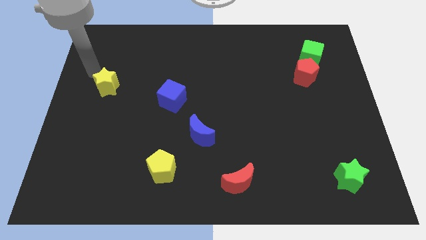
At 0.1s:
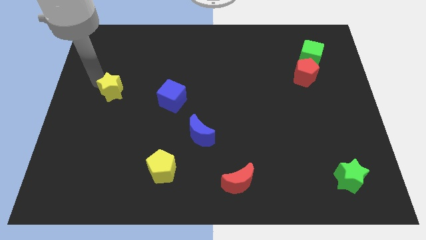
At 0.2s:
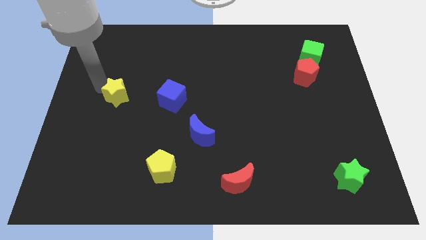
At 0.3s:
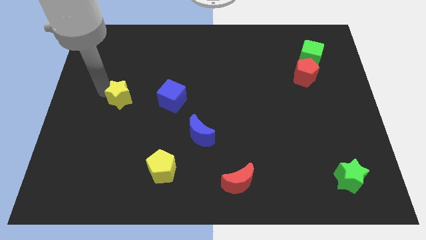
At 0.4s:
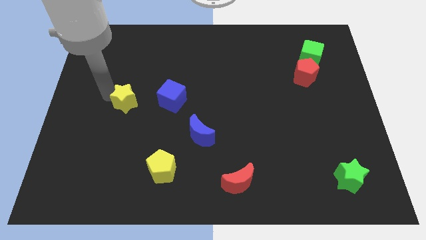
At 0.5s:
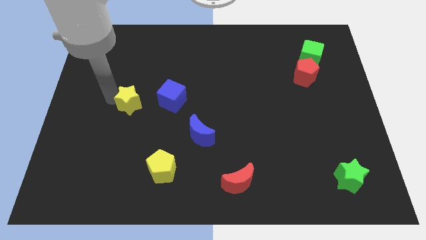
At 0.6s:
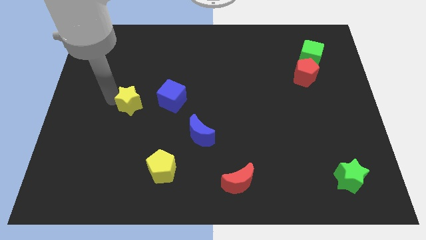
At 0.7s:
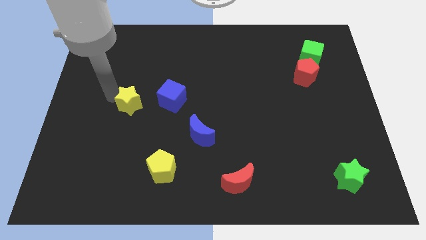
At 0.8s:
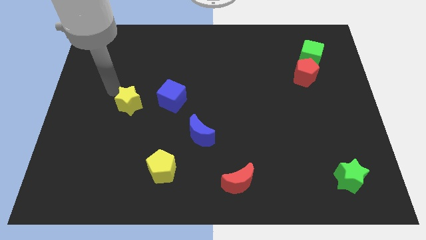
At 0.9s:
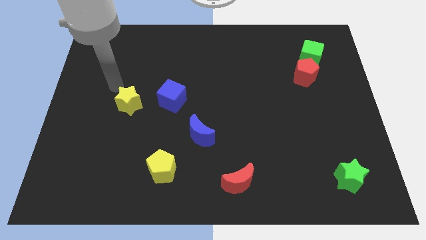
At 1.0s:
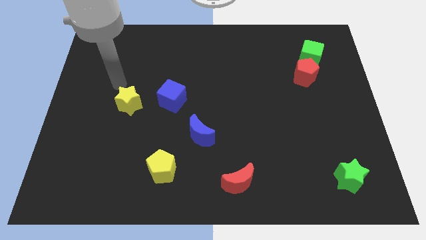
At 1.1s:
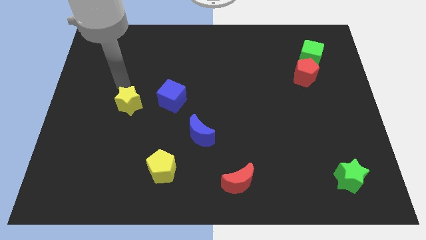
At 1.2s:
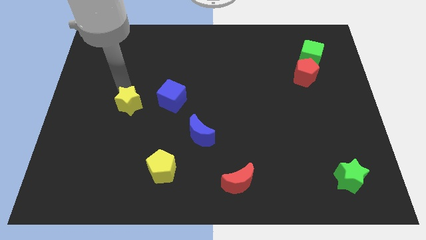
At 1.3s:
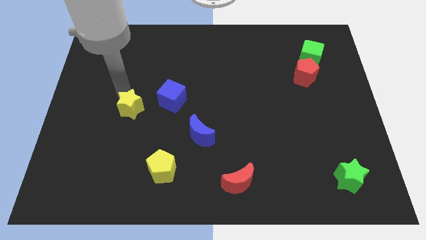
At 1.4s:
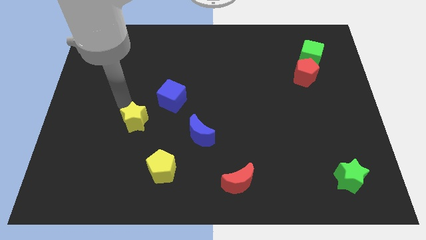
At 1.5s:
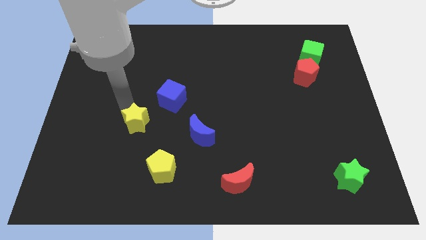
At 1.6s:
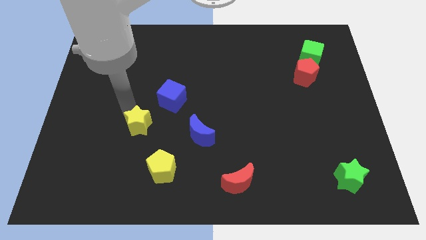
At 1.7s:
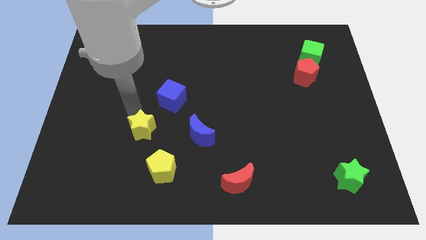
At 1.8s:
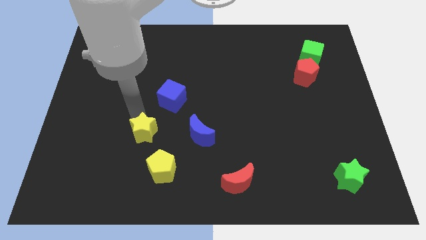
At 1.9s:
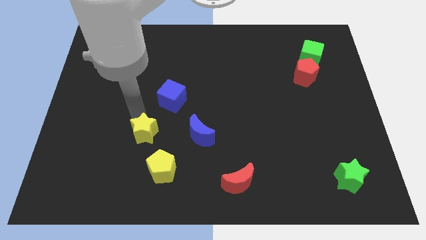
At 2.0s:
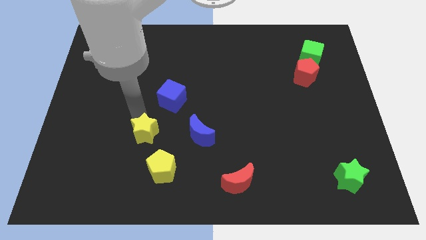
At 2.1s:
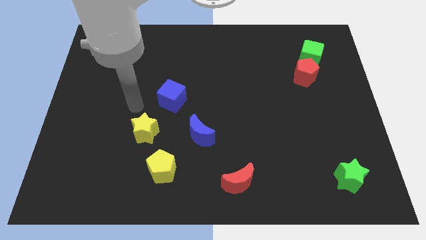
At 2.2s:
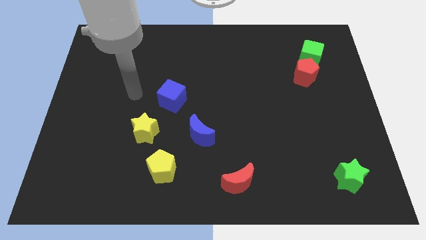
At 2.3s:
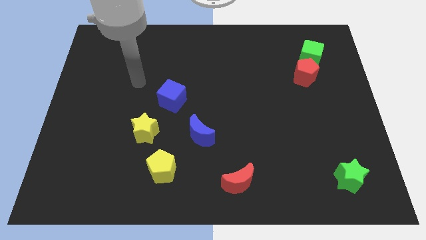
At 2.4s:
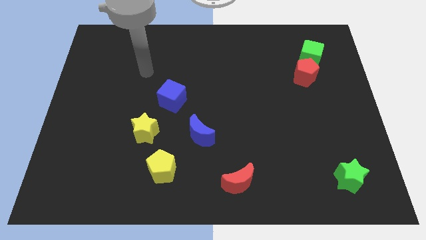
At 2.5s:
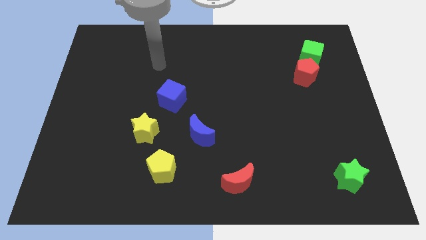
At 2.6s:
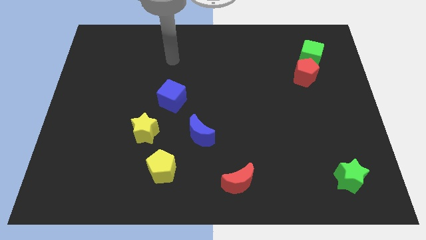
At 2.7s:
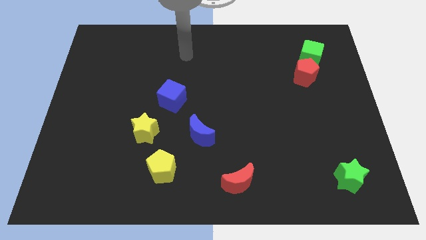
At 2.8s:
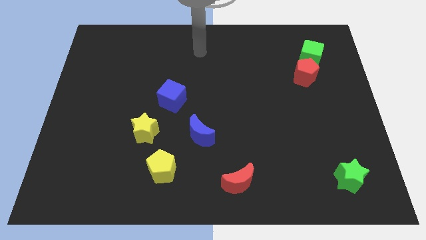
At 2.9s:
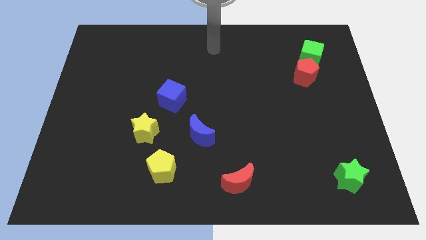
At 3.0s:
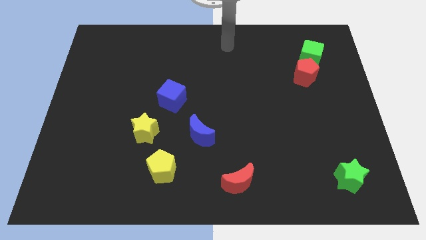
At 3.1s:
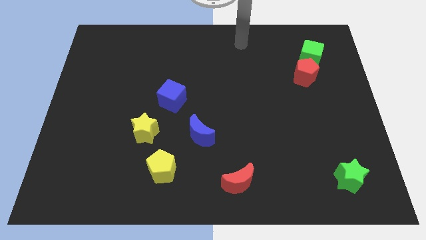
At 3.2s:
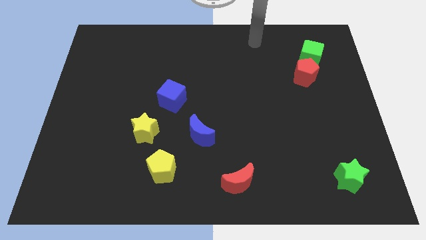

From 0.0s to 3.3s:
move yellow star diagonally left to yellow pentagon

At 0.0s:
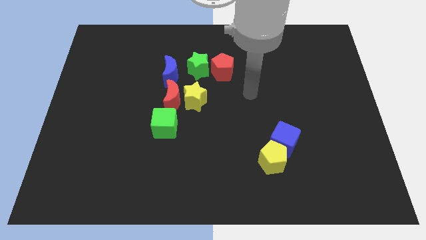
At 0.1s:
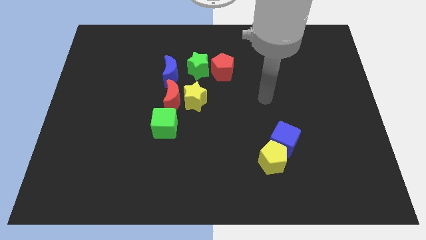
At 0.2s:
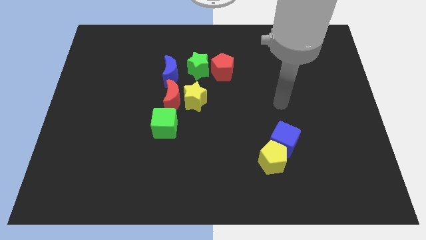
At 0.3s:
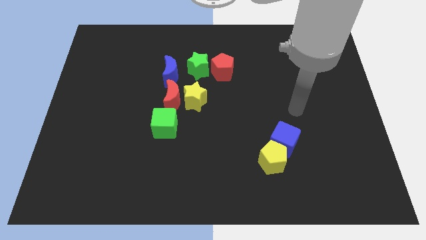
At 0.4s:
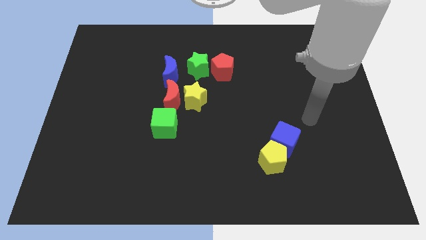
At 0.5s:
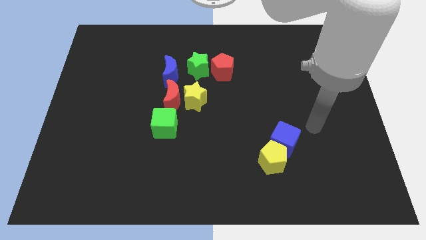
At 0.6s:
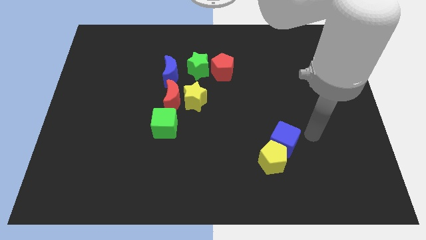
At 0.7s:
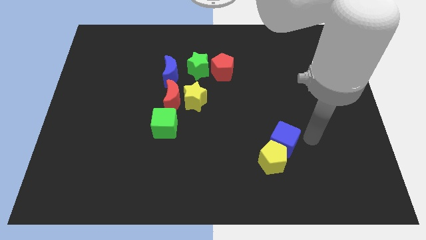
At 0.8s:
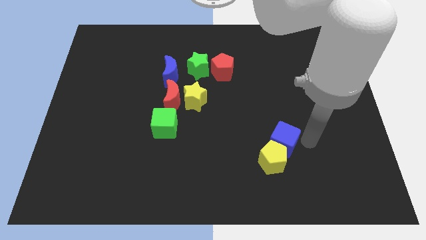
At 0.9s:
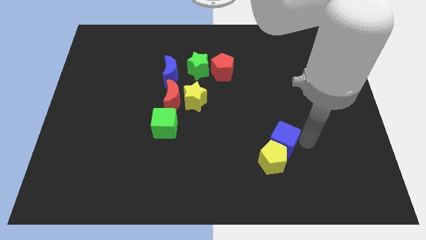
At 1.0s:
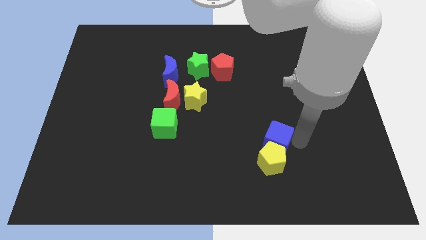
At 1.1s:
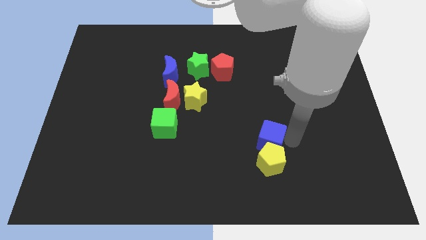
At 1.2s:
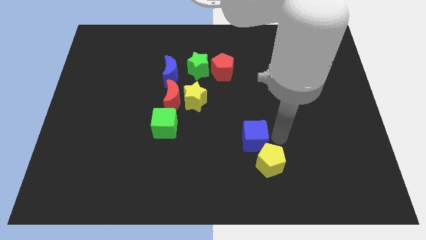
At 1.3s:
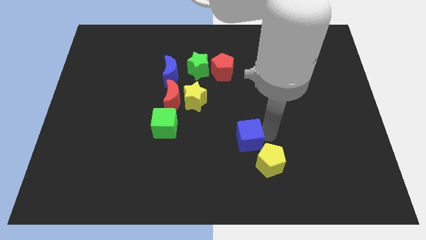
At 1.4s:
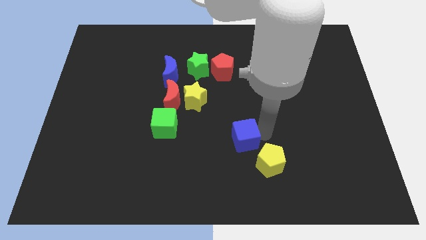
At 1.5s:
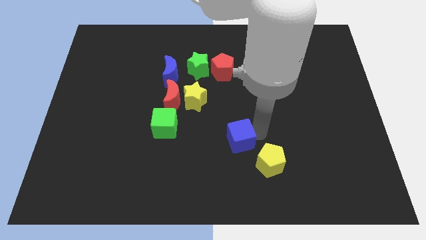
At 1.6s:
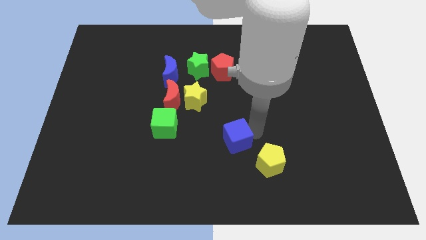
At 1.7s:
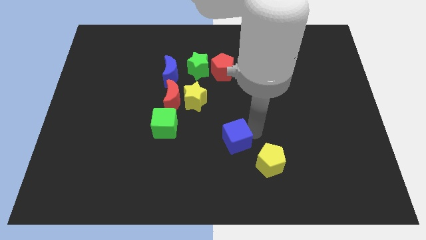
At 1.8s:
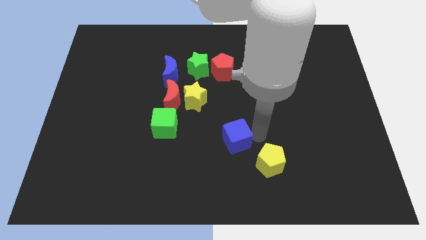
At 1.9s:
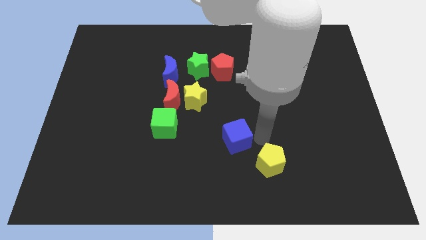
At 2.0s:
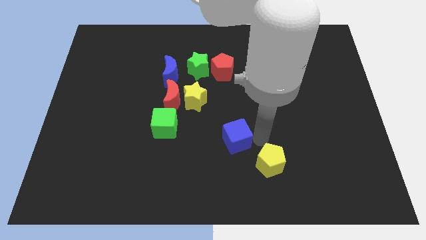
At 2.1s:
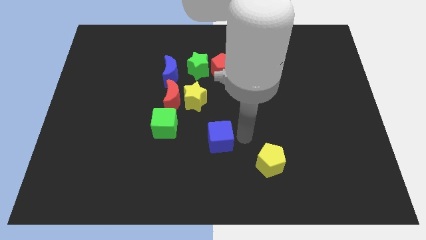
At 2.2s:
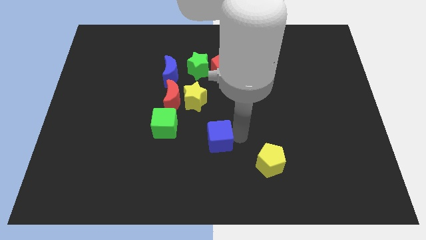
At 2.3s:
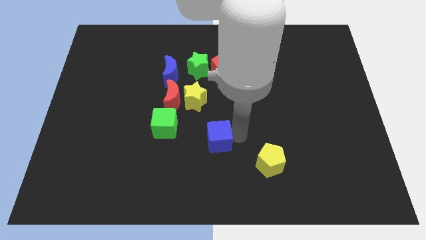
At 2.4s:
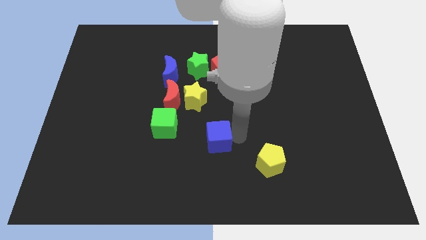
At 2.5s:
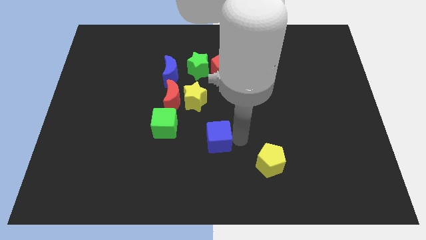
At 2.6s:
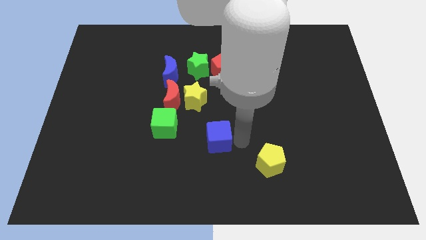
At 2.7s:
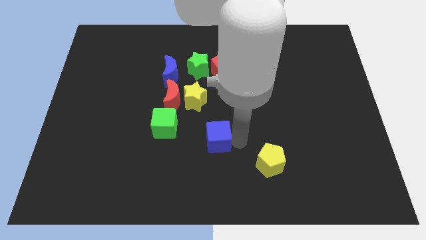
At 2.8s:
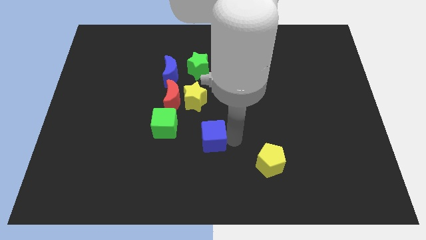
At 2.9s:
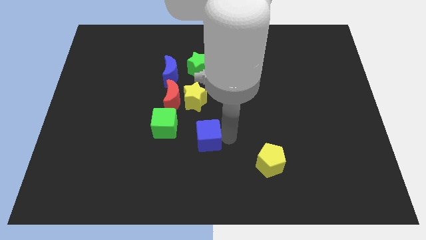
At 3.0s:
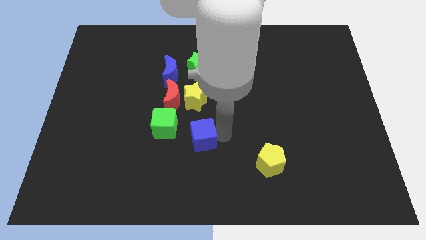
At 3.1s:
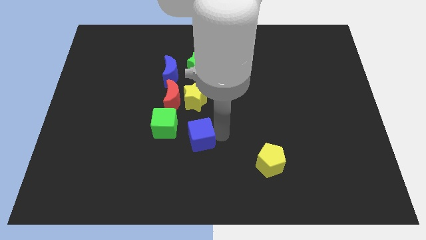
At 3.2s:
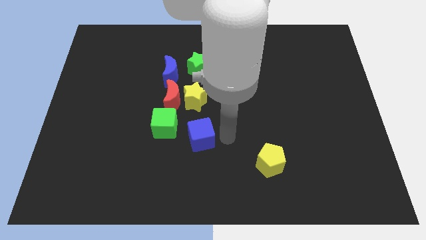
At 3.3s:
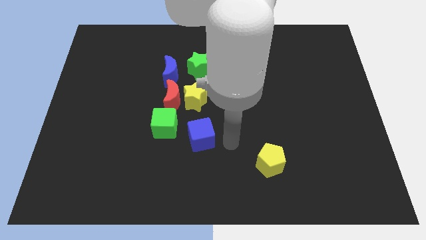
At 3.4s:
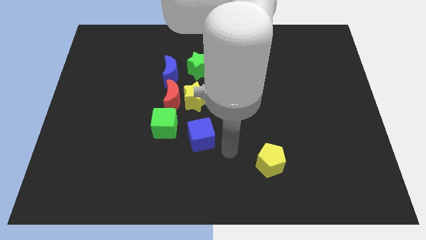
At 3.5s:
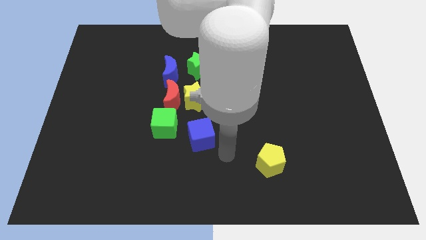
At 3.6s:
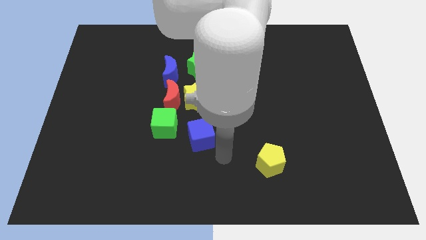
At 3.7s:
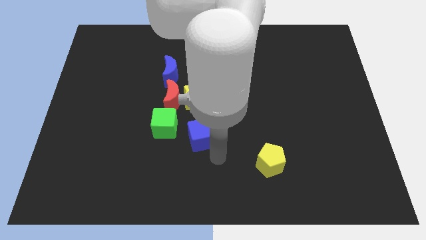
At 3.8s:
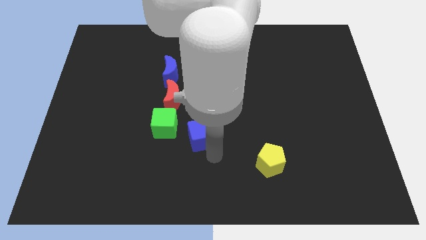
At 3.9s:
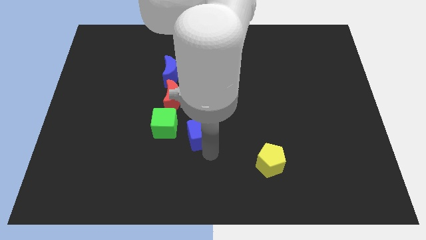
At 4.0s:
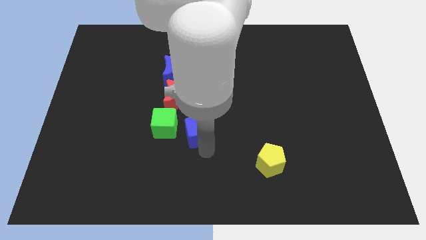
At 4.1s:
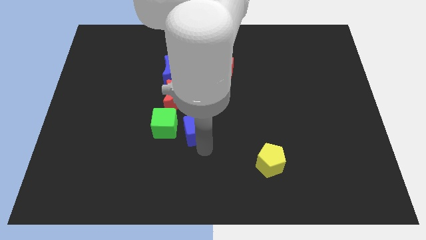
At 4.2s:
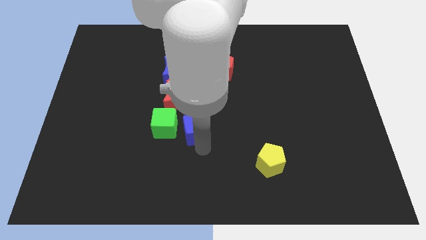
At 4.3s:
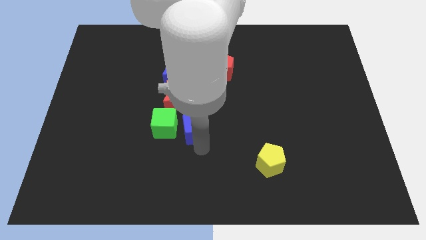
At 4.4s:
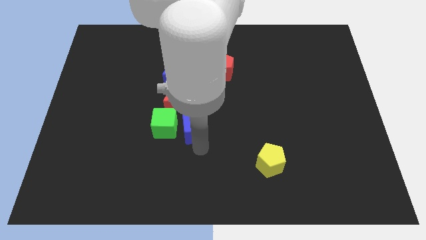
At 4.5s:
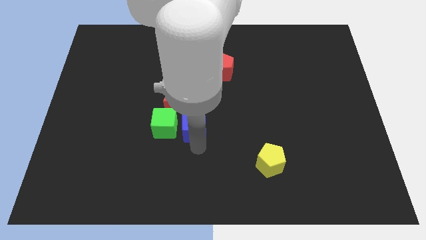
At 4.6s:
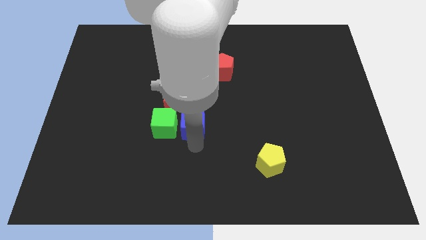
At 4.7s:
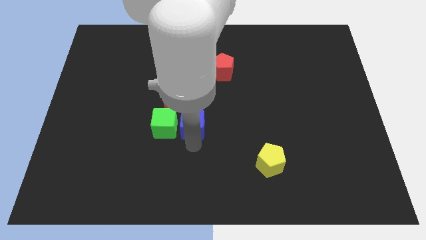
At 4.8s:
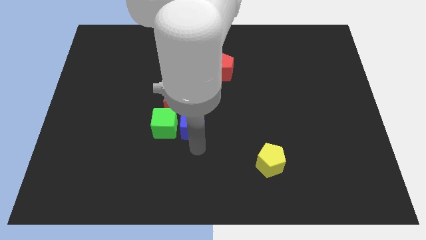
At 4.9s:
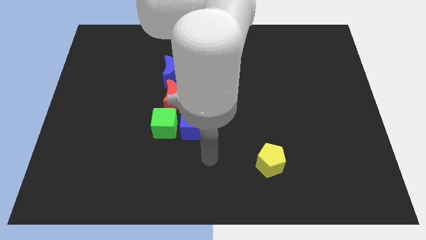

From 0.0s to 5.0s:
place the blue cube to the right side of the green cube

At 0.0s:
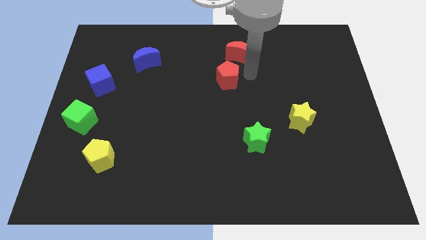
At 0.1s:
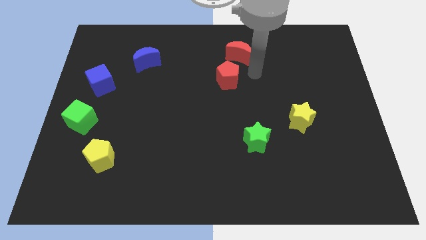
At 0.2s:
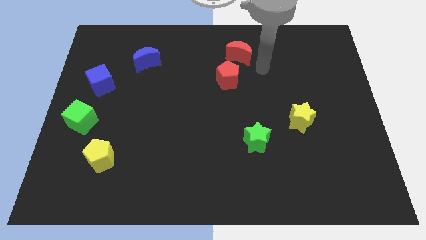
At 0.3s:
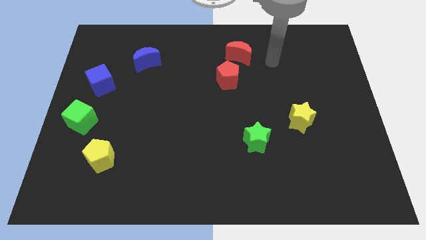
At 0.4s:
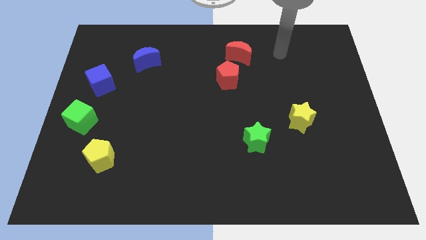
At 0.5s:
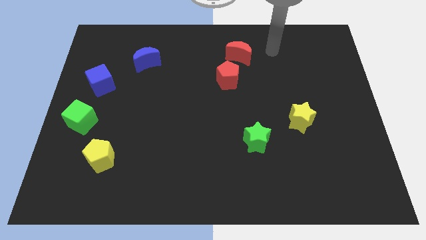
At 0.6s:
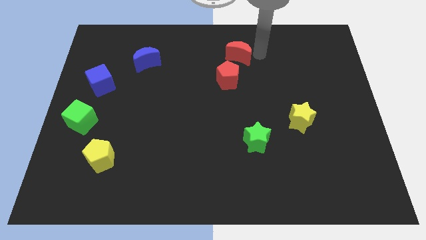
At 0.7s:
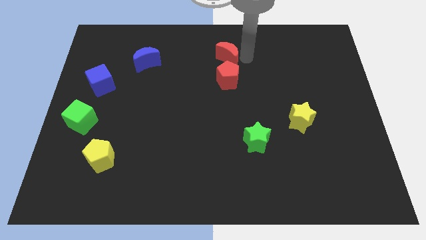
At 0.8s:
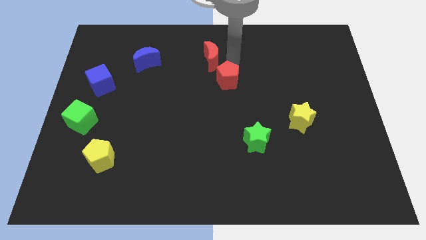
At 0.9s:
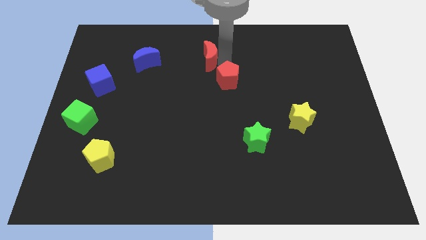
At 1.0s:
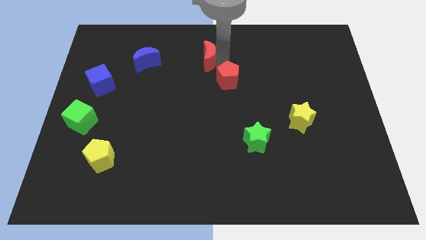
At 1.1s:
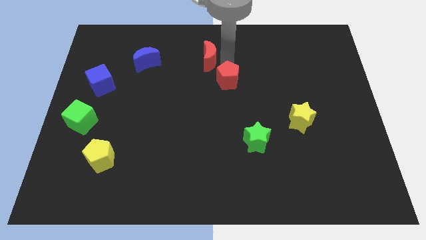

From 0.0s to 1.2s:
move the red crescent diagonal to the right of the blue crescent
